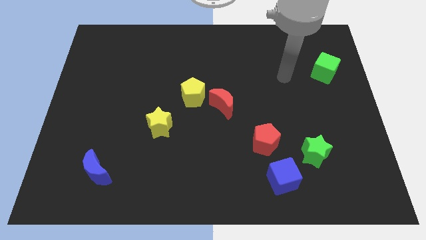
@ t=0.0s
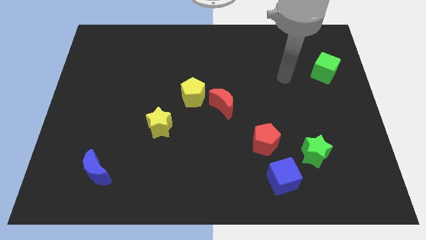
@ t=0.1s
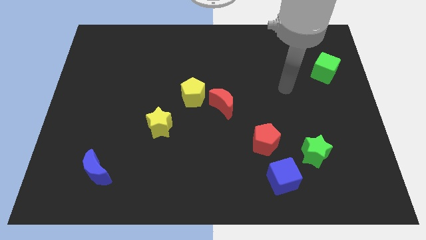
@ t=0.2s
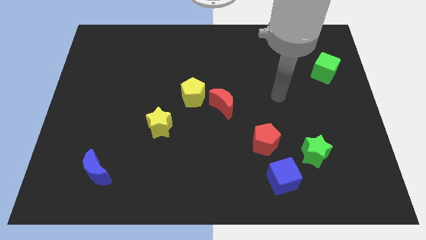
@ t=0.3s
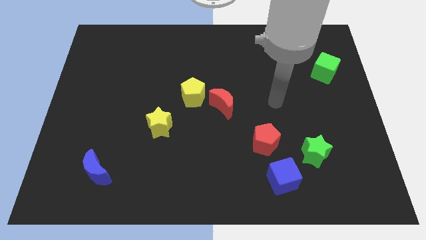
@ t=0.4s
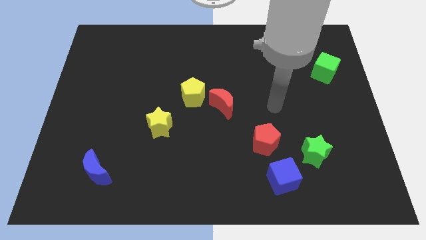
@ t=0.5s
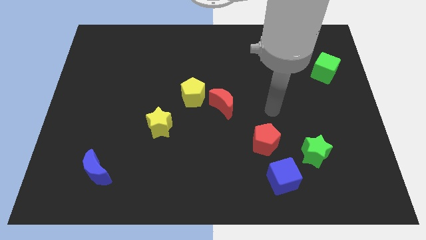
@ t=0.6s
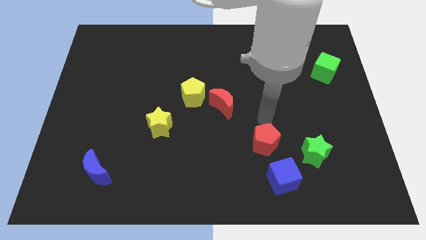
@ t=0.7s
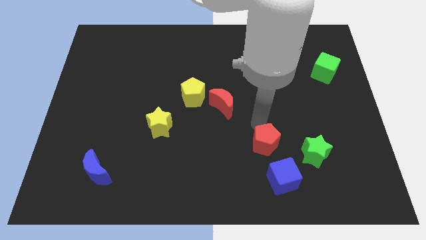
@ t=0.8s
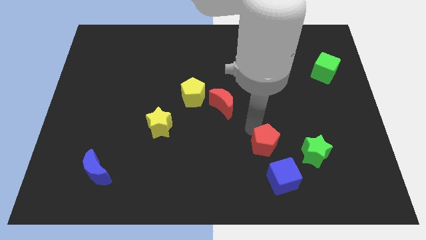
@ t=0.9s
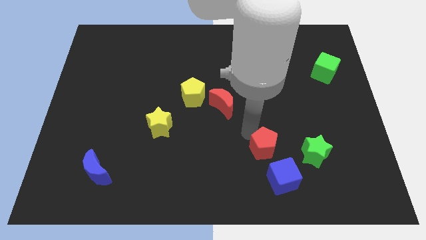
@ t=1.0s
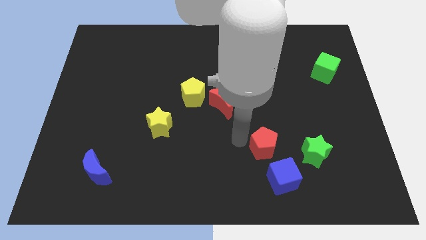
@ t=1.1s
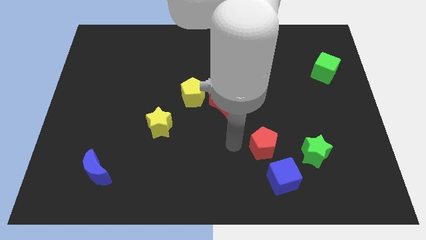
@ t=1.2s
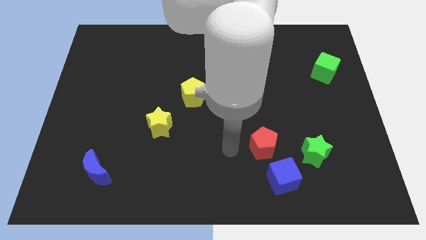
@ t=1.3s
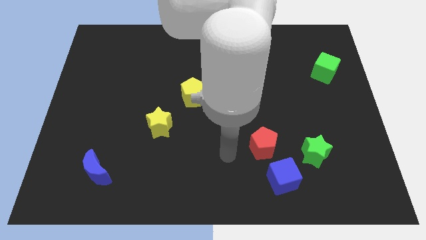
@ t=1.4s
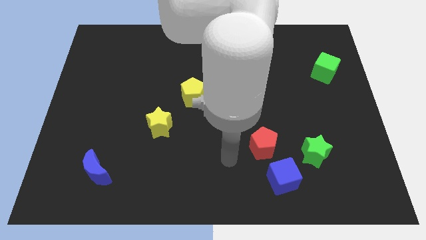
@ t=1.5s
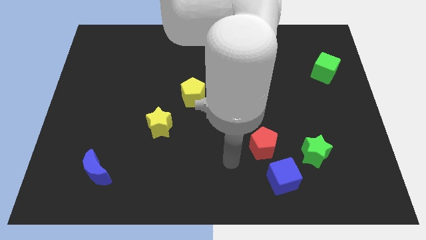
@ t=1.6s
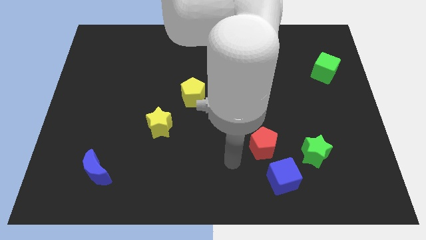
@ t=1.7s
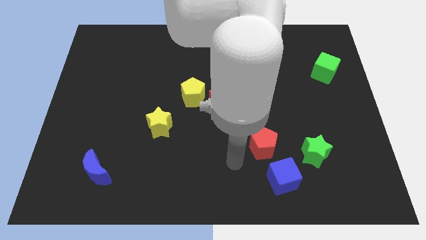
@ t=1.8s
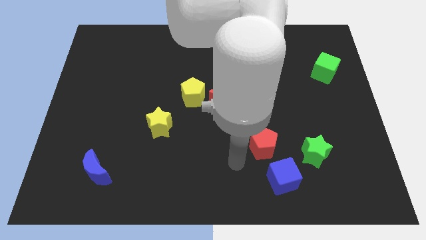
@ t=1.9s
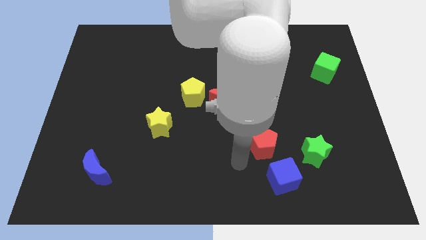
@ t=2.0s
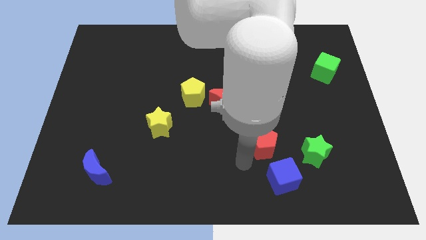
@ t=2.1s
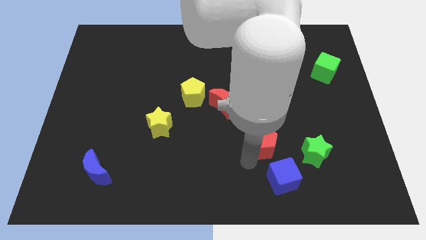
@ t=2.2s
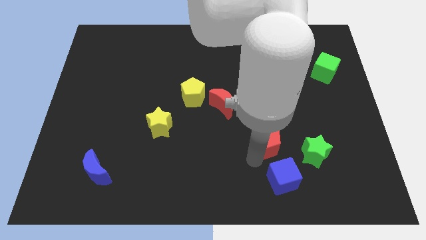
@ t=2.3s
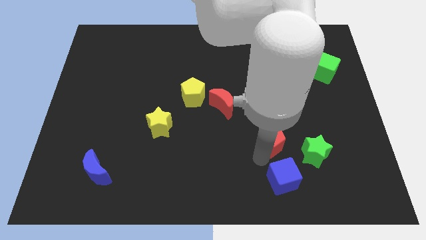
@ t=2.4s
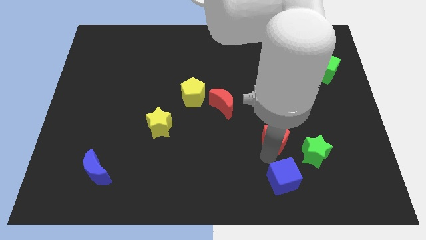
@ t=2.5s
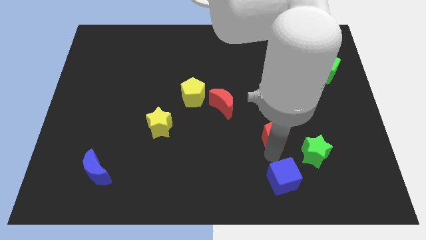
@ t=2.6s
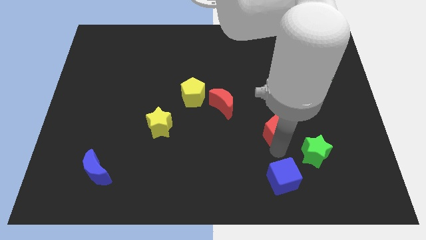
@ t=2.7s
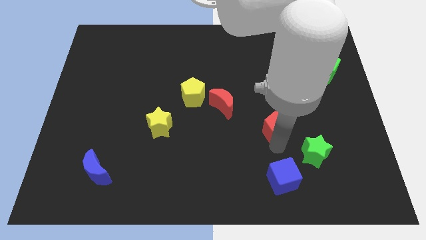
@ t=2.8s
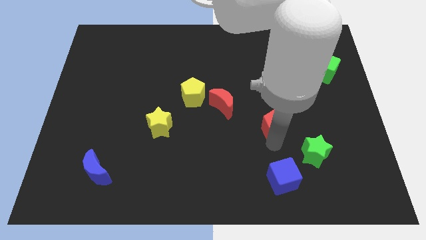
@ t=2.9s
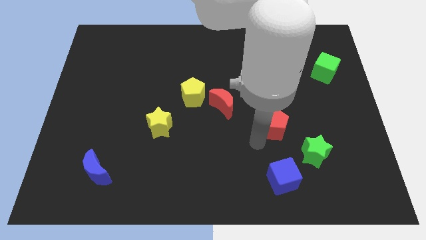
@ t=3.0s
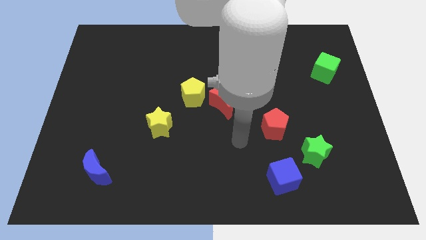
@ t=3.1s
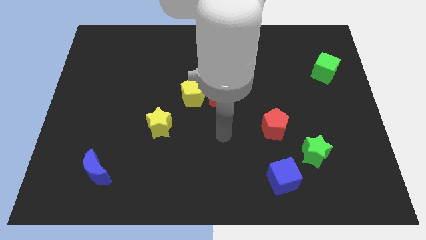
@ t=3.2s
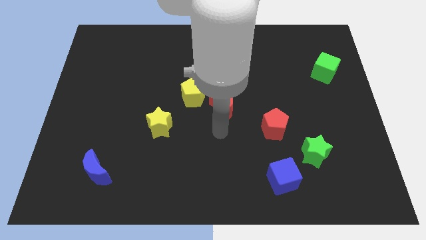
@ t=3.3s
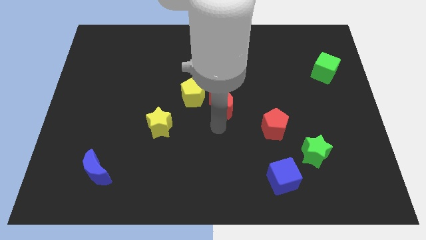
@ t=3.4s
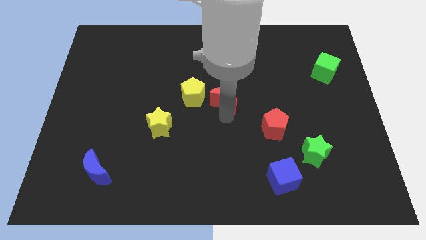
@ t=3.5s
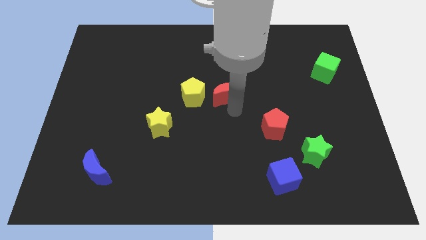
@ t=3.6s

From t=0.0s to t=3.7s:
slightly move the red pentagon towards top

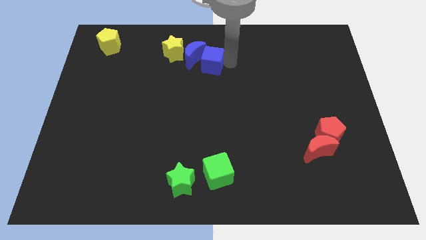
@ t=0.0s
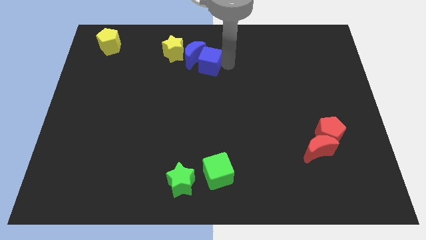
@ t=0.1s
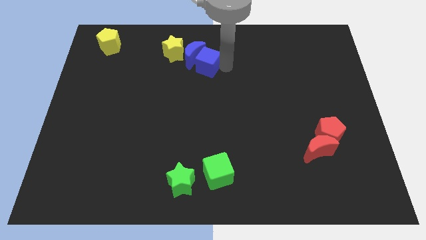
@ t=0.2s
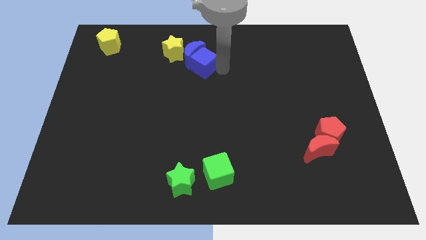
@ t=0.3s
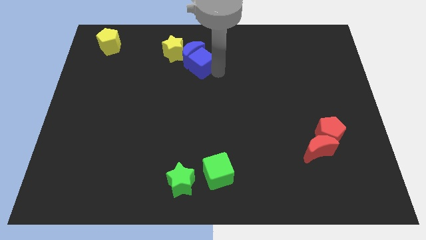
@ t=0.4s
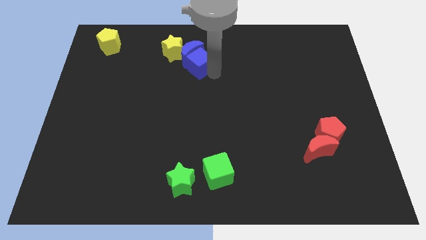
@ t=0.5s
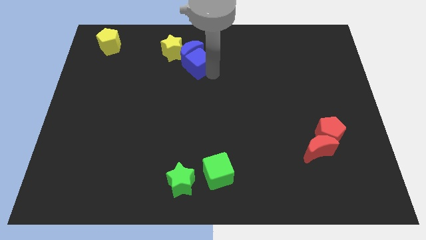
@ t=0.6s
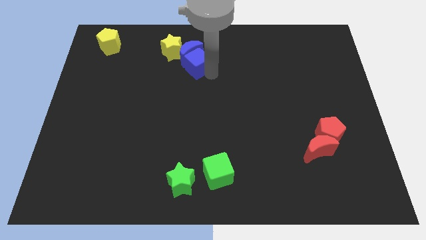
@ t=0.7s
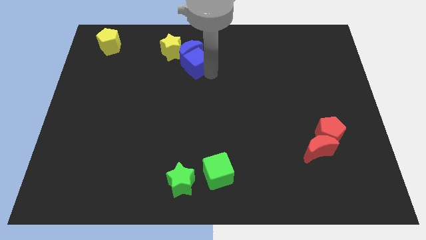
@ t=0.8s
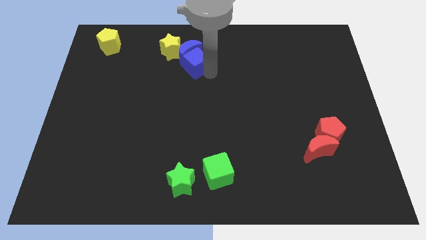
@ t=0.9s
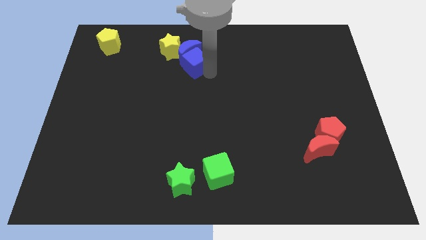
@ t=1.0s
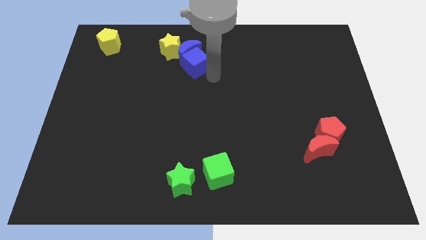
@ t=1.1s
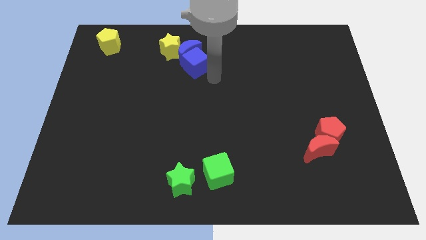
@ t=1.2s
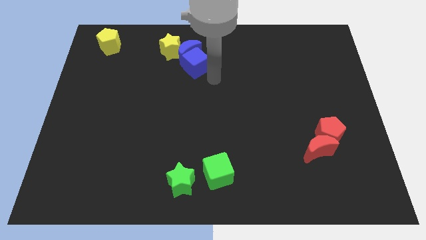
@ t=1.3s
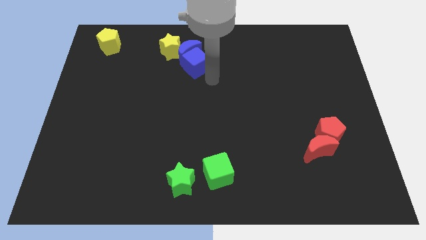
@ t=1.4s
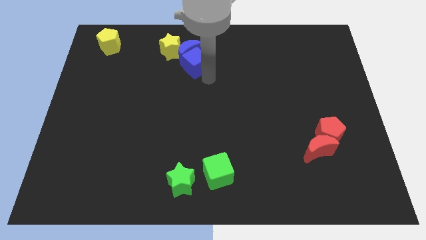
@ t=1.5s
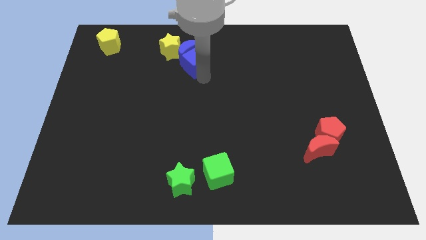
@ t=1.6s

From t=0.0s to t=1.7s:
move the yellow star with the blue moon

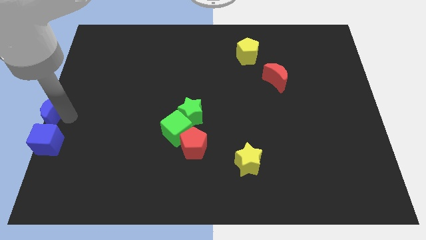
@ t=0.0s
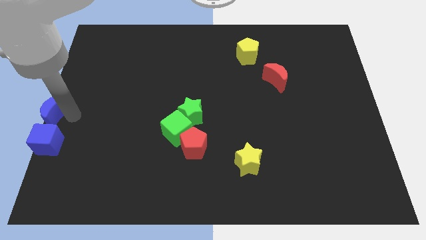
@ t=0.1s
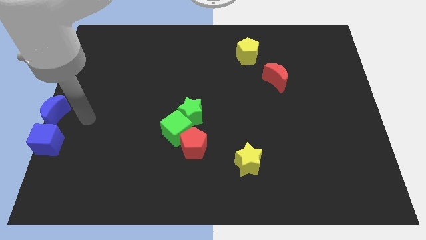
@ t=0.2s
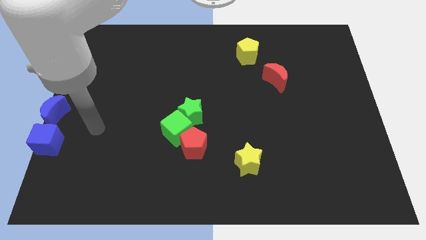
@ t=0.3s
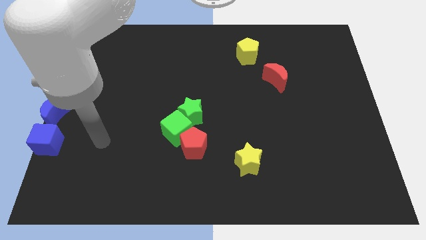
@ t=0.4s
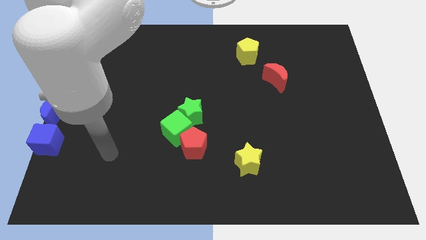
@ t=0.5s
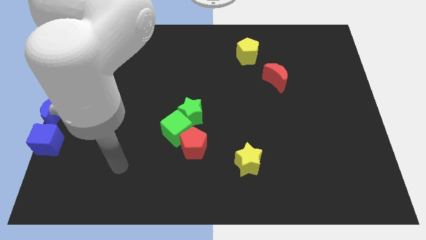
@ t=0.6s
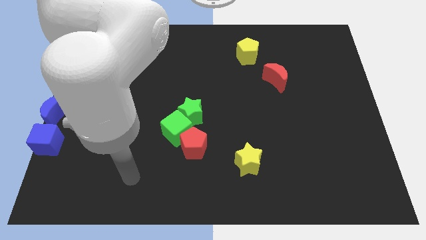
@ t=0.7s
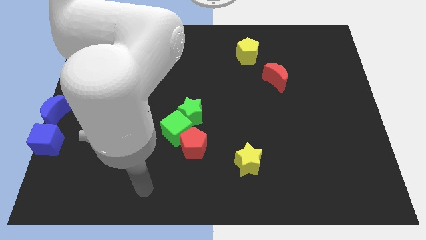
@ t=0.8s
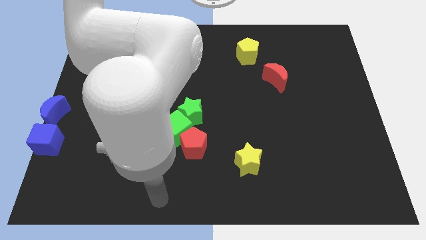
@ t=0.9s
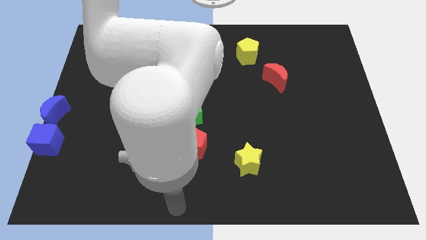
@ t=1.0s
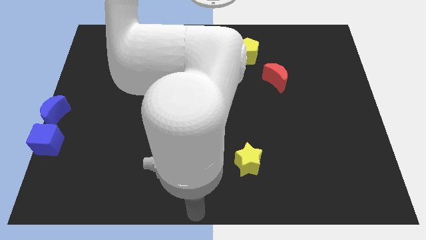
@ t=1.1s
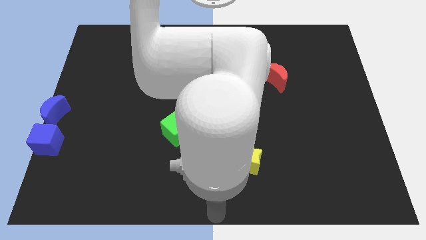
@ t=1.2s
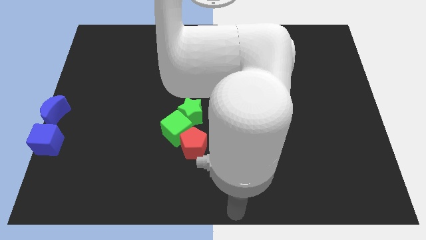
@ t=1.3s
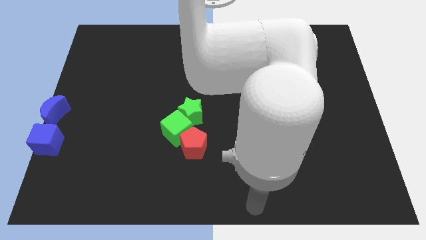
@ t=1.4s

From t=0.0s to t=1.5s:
move your arm away from the blue moon

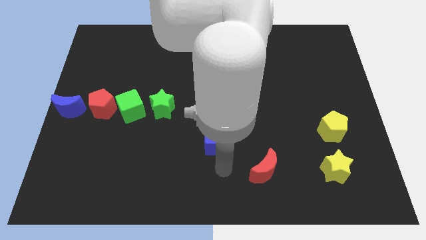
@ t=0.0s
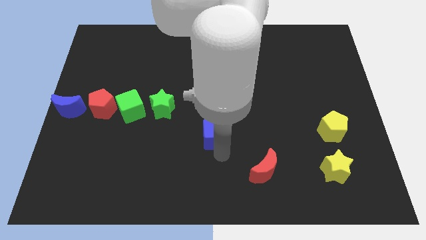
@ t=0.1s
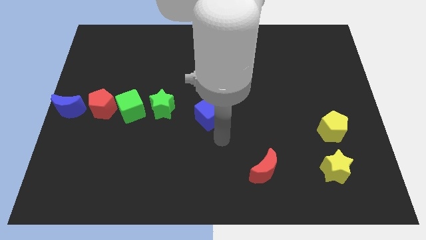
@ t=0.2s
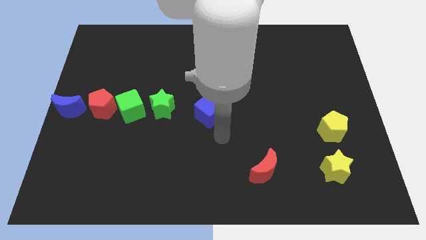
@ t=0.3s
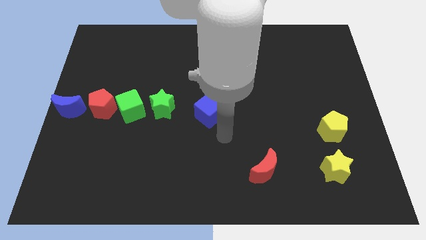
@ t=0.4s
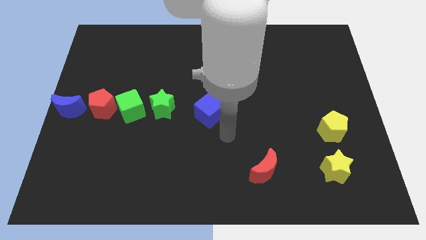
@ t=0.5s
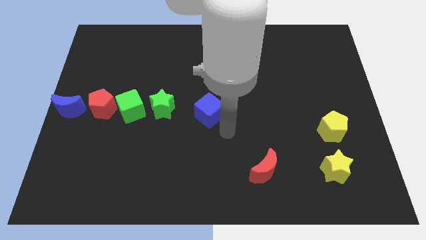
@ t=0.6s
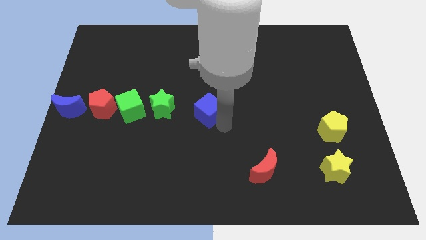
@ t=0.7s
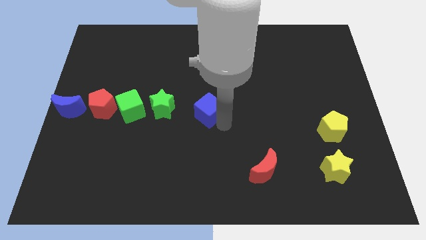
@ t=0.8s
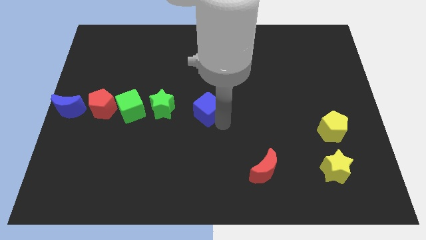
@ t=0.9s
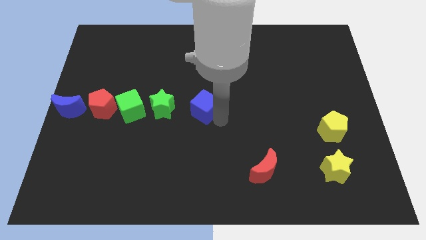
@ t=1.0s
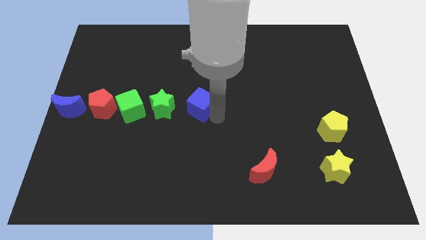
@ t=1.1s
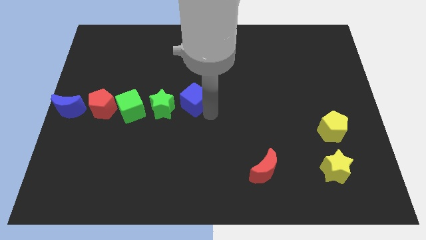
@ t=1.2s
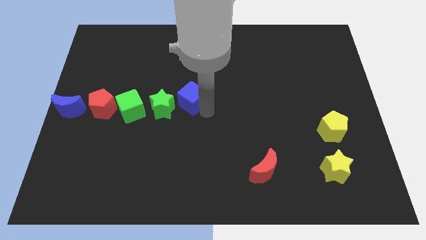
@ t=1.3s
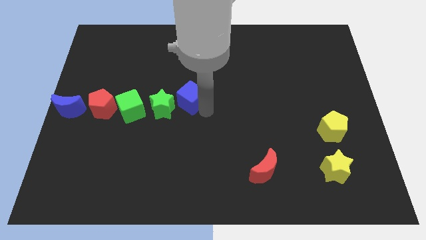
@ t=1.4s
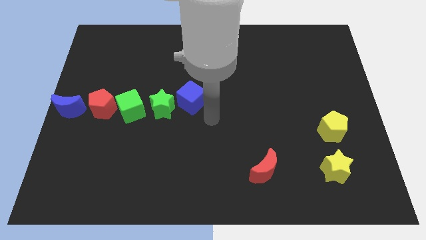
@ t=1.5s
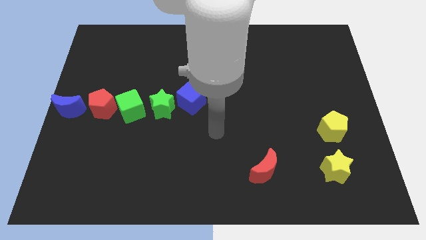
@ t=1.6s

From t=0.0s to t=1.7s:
push the blue cube to the right of the green star

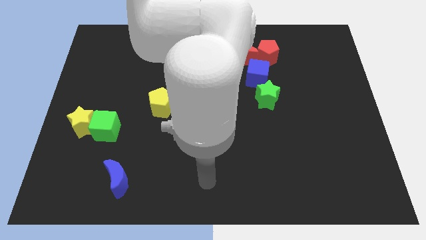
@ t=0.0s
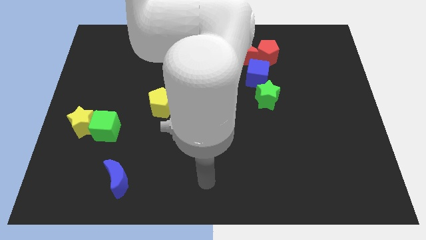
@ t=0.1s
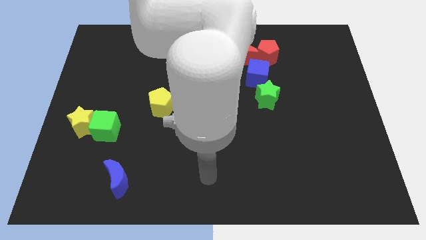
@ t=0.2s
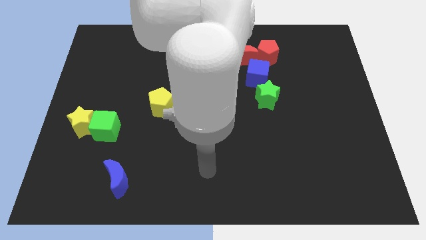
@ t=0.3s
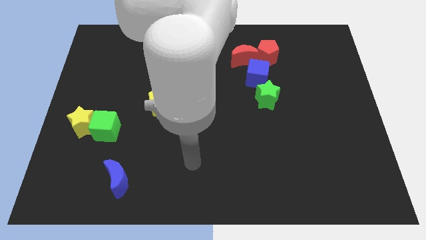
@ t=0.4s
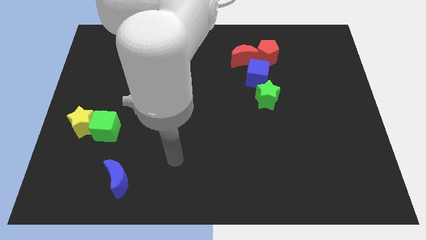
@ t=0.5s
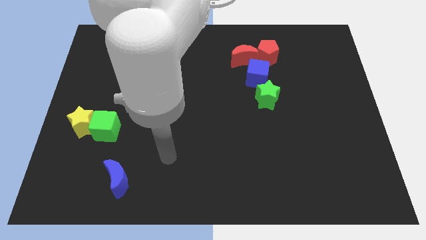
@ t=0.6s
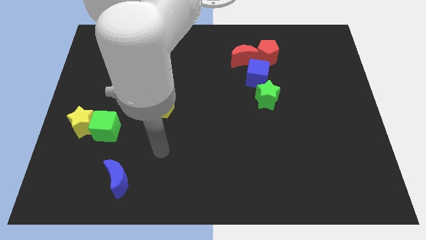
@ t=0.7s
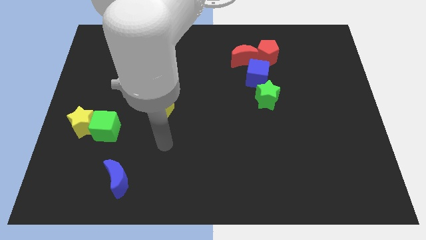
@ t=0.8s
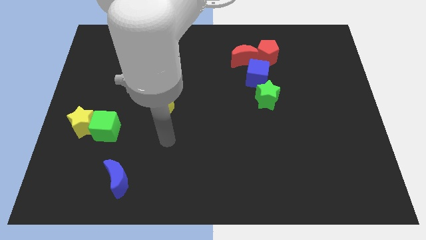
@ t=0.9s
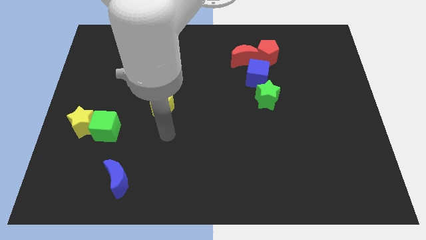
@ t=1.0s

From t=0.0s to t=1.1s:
slide your arm below the yellow pentagon
